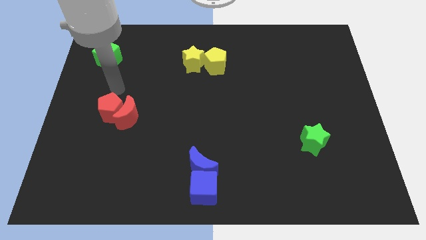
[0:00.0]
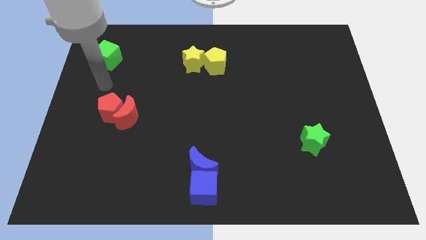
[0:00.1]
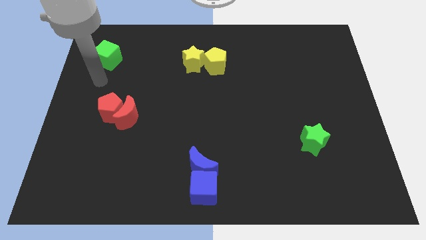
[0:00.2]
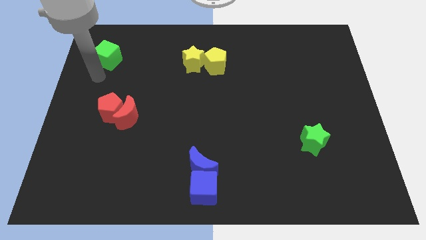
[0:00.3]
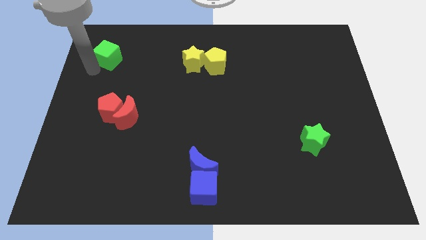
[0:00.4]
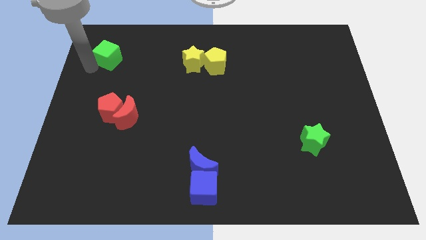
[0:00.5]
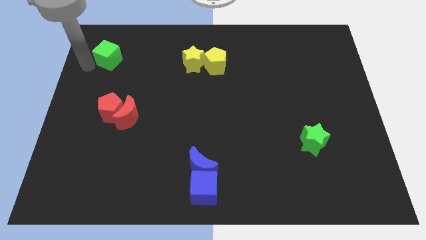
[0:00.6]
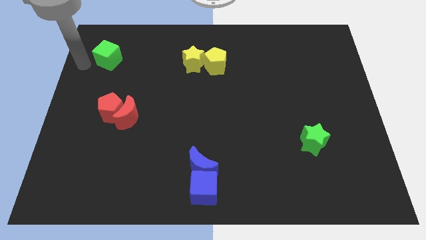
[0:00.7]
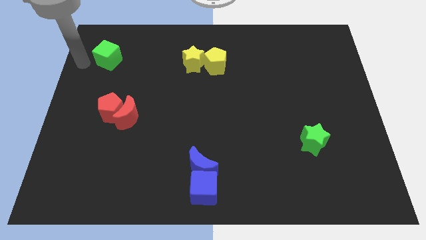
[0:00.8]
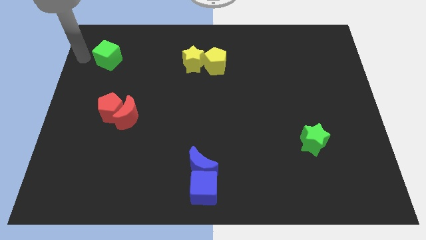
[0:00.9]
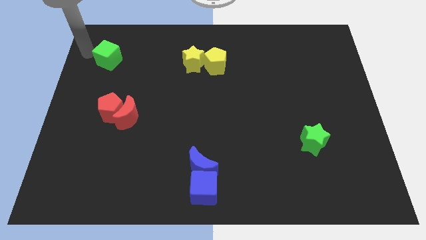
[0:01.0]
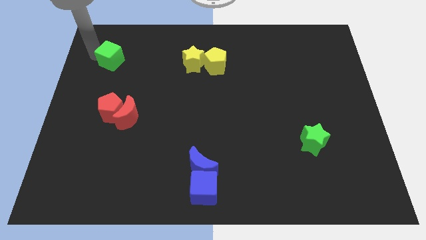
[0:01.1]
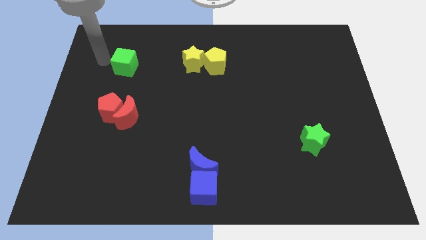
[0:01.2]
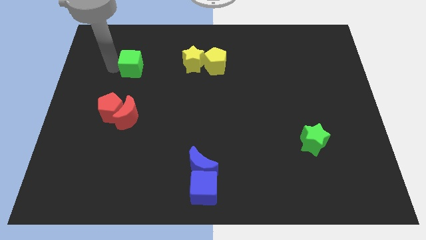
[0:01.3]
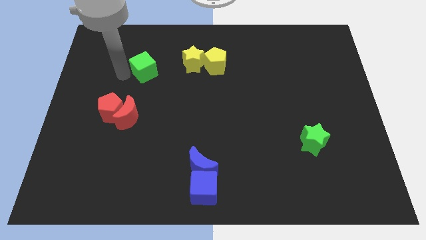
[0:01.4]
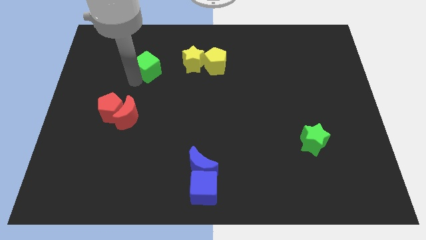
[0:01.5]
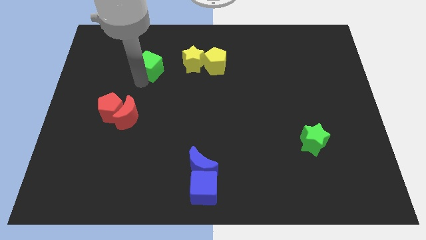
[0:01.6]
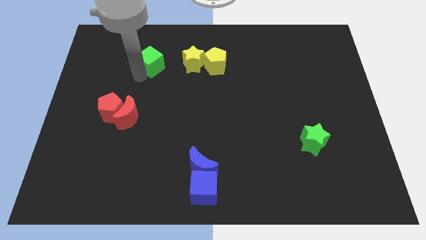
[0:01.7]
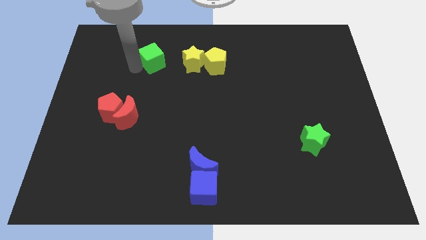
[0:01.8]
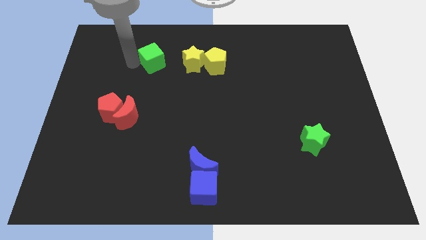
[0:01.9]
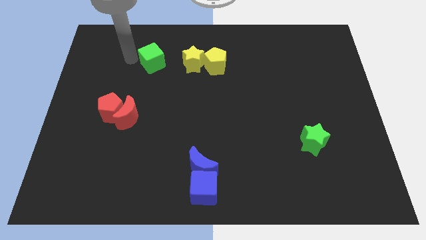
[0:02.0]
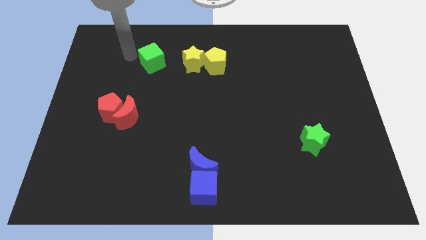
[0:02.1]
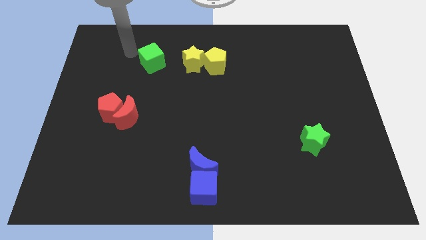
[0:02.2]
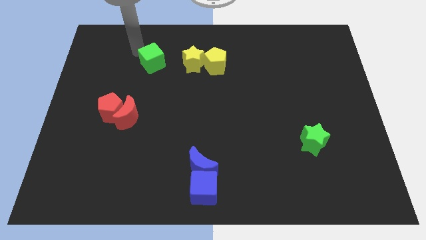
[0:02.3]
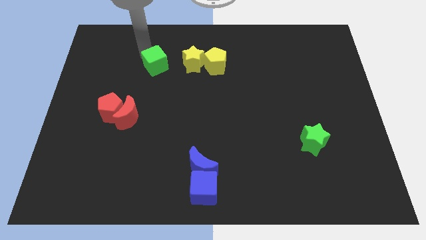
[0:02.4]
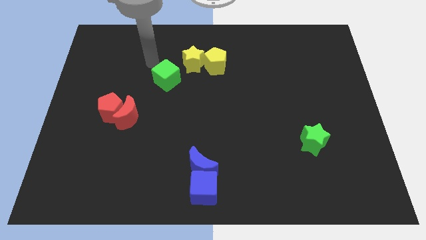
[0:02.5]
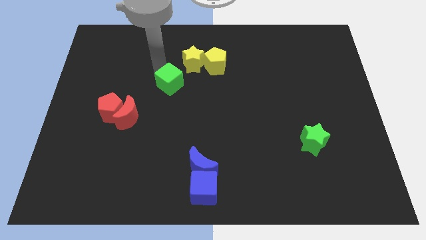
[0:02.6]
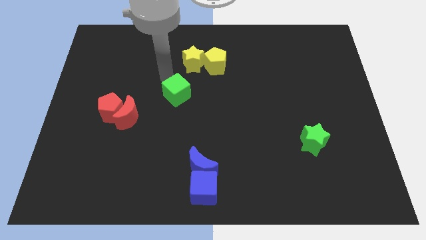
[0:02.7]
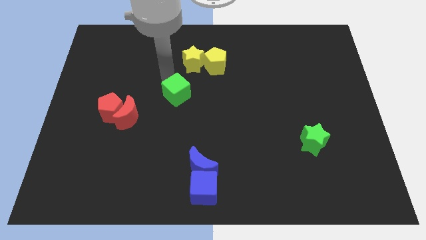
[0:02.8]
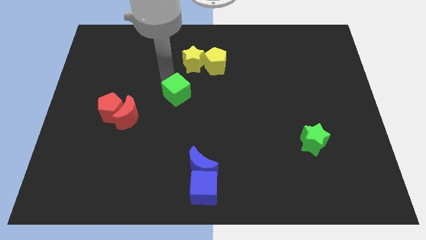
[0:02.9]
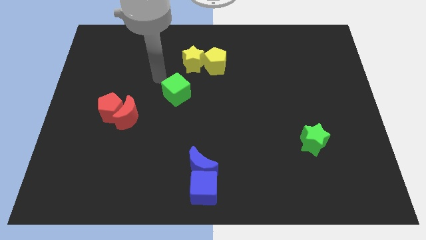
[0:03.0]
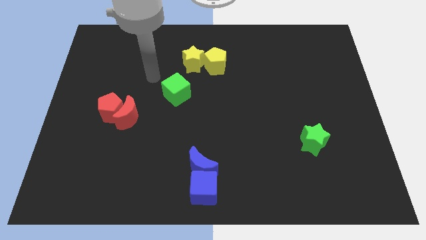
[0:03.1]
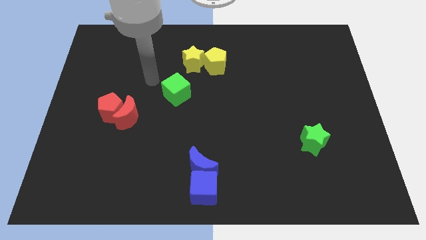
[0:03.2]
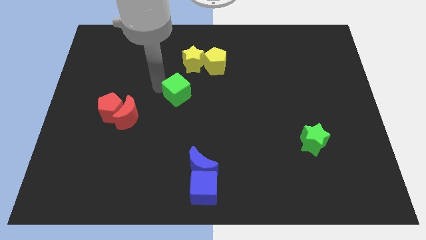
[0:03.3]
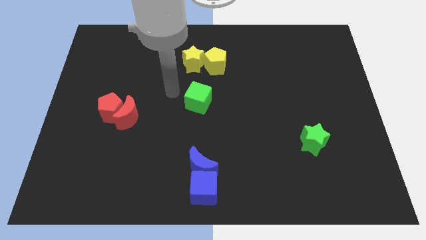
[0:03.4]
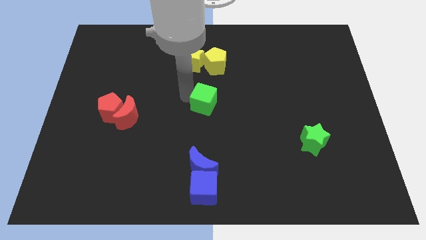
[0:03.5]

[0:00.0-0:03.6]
place the green cube below yellow pentagon

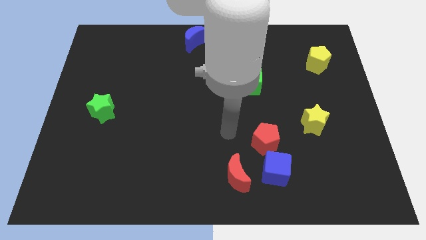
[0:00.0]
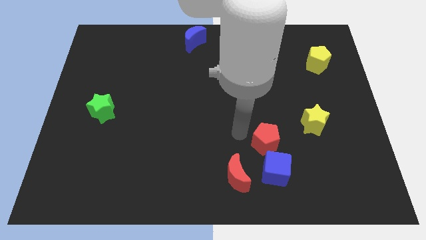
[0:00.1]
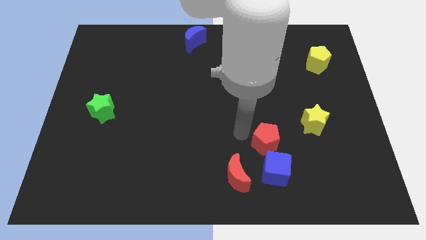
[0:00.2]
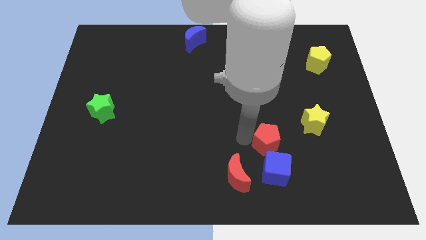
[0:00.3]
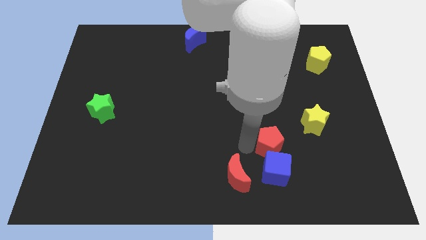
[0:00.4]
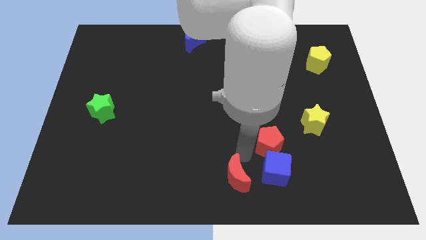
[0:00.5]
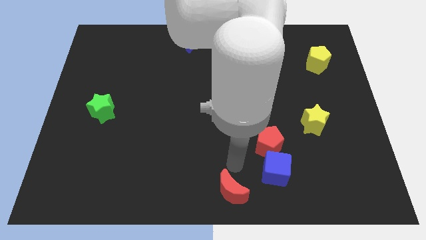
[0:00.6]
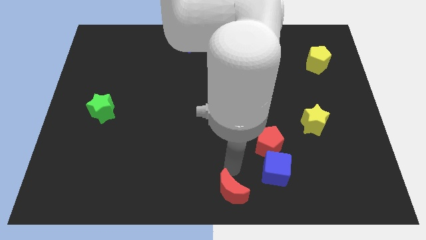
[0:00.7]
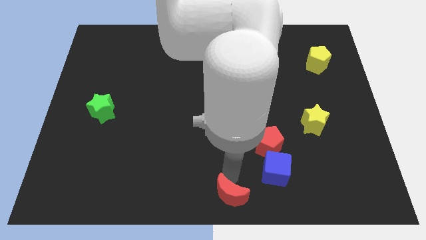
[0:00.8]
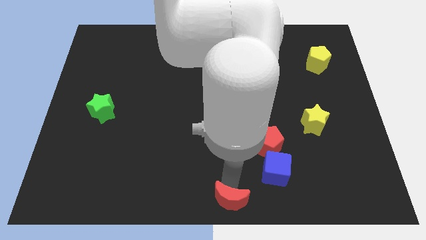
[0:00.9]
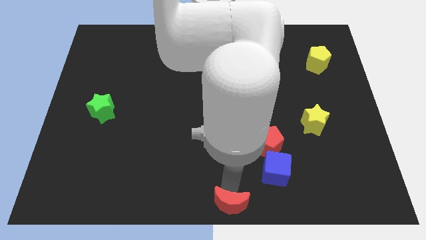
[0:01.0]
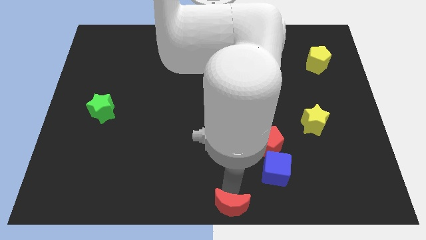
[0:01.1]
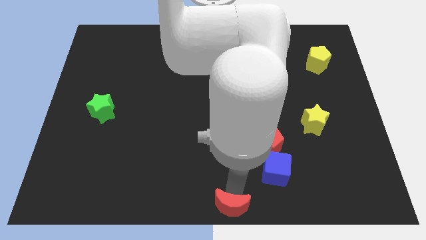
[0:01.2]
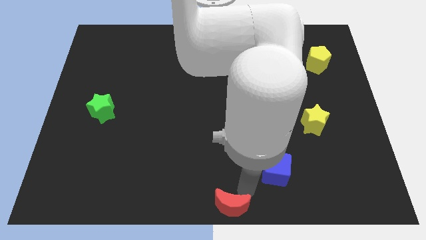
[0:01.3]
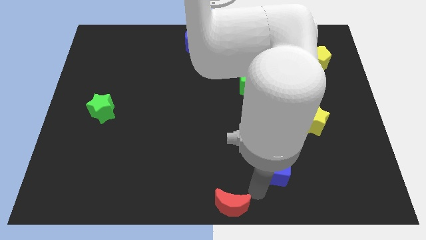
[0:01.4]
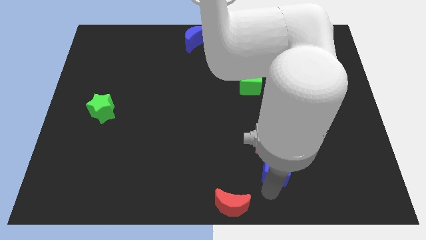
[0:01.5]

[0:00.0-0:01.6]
push the red moon to the bottom center

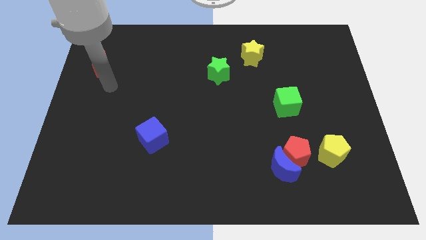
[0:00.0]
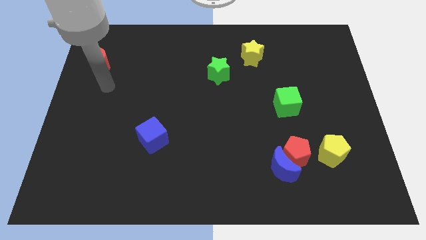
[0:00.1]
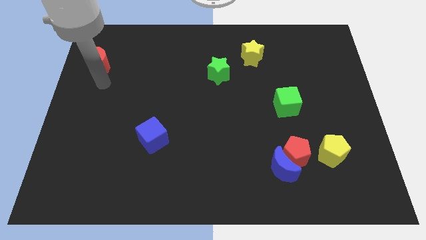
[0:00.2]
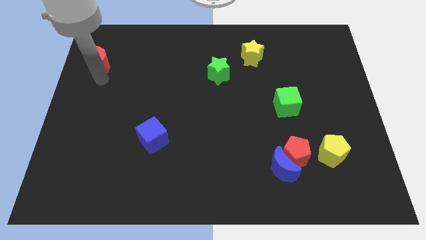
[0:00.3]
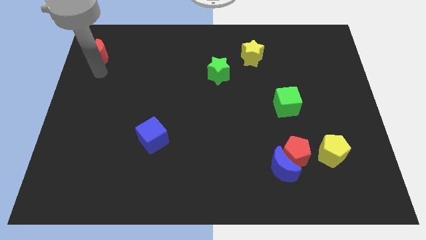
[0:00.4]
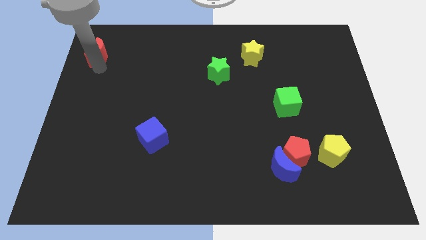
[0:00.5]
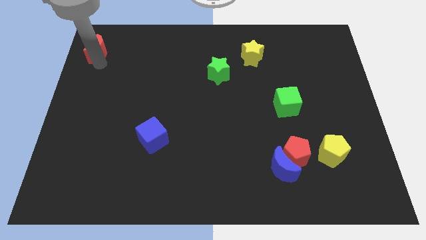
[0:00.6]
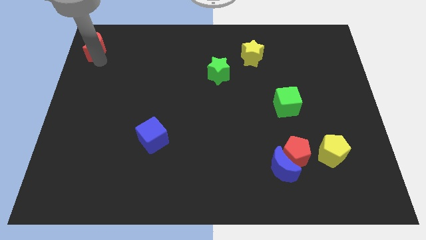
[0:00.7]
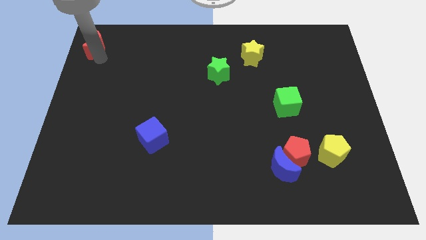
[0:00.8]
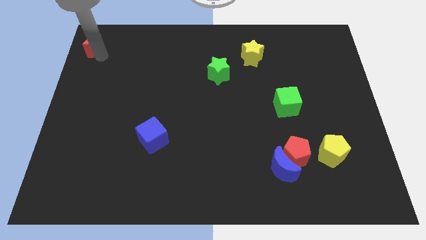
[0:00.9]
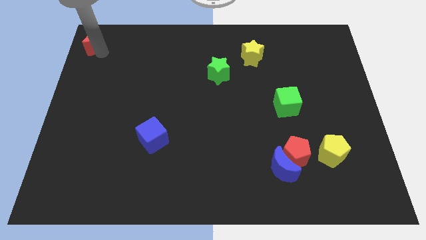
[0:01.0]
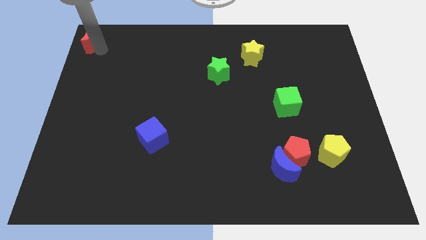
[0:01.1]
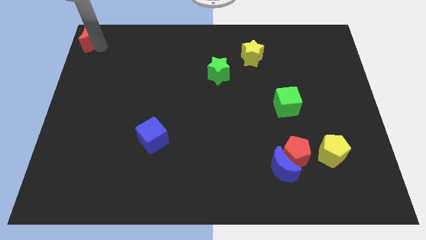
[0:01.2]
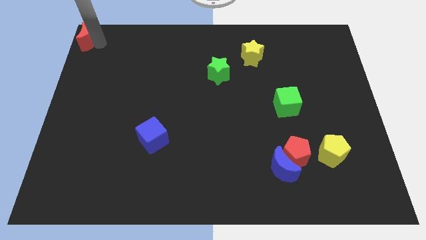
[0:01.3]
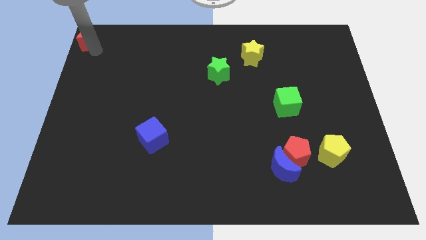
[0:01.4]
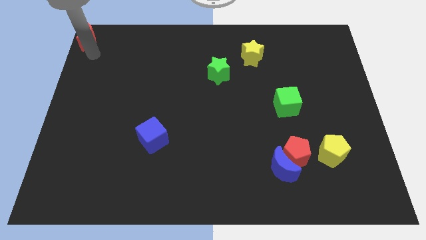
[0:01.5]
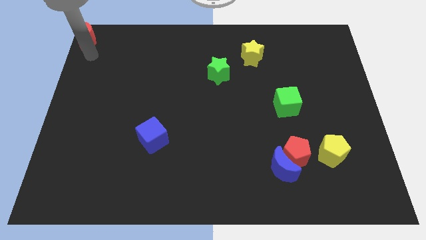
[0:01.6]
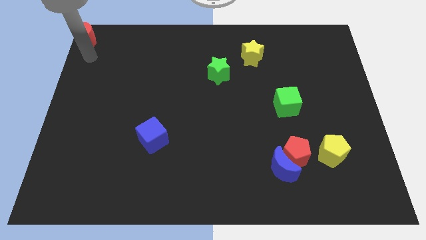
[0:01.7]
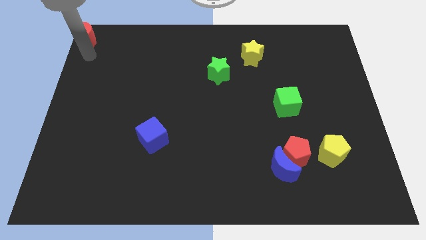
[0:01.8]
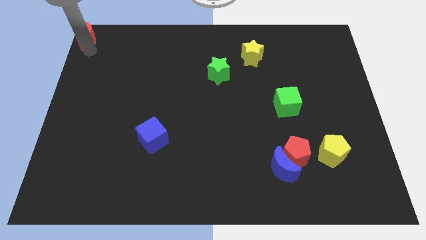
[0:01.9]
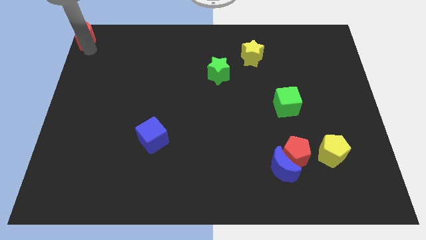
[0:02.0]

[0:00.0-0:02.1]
slide red moon to the top left corner

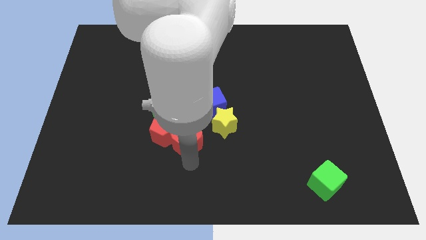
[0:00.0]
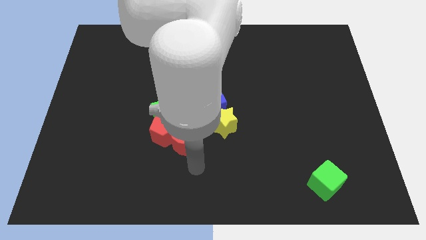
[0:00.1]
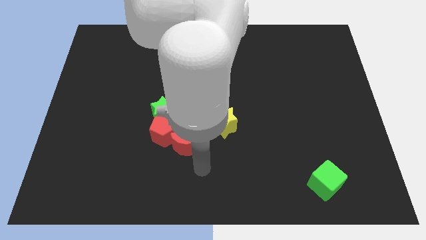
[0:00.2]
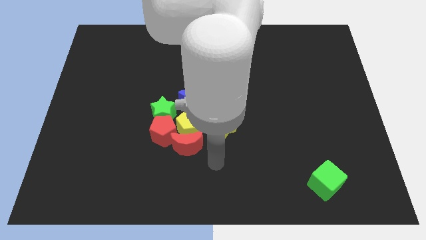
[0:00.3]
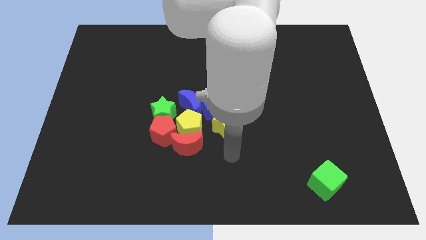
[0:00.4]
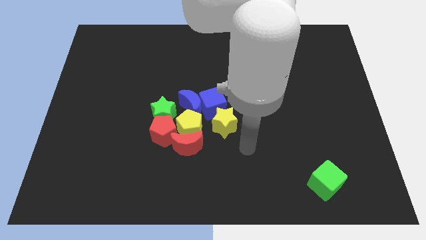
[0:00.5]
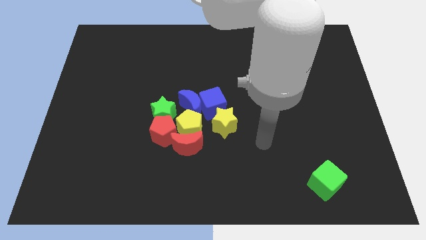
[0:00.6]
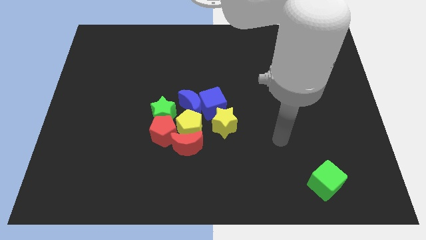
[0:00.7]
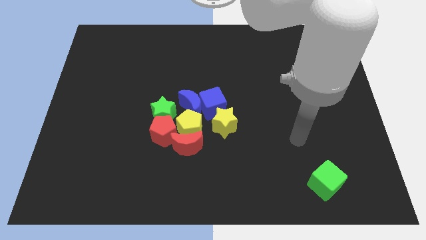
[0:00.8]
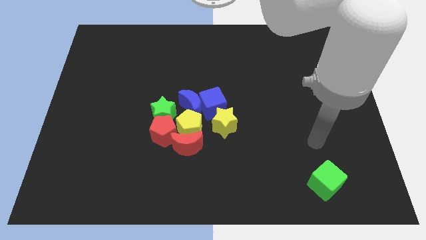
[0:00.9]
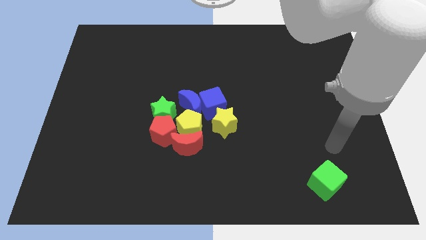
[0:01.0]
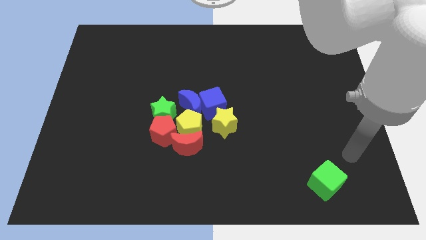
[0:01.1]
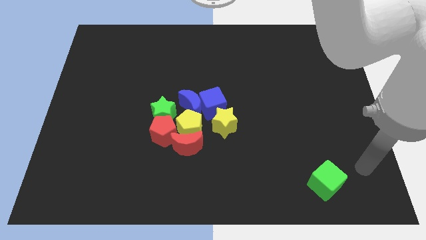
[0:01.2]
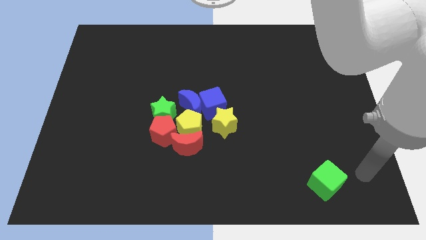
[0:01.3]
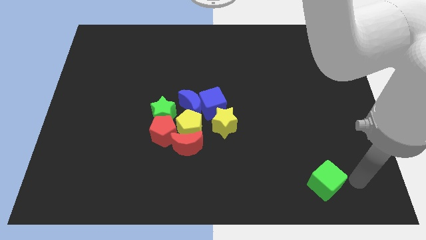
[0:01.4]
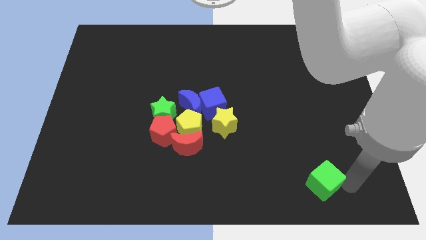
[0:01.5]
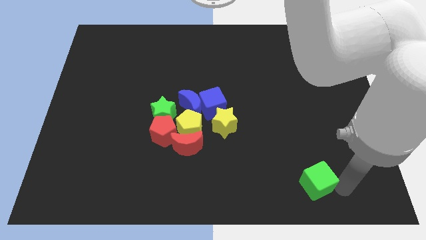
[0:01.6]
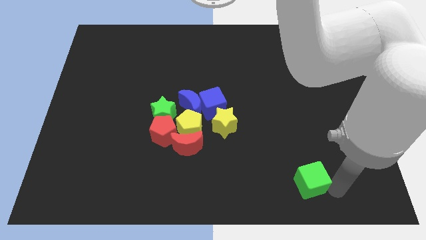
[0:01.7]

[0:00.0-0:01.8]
move your arm to the bottom right of the green cube
